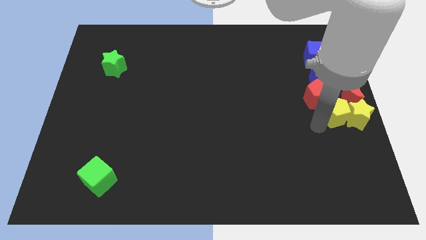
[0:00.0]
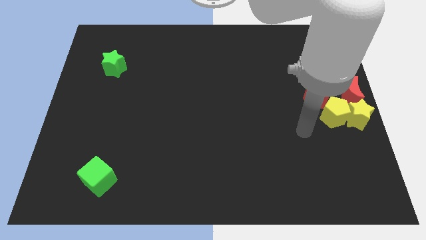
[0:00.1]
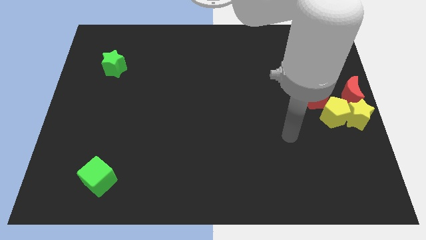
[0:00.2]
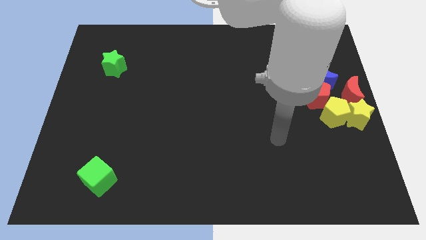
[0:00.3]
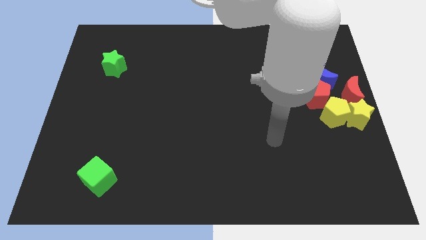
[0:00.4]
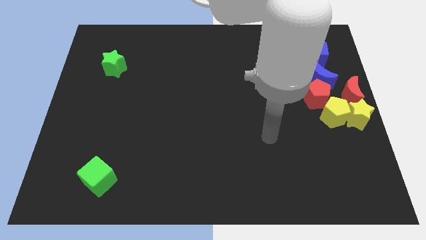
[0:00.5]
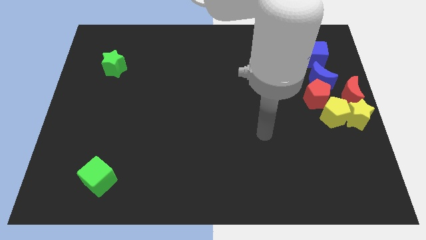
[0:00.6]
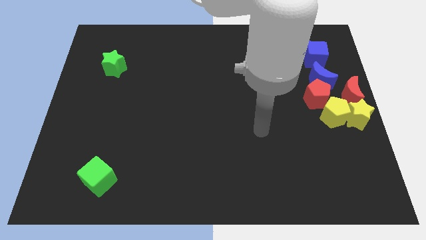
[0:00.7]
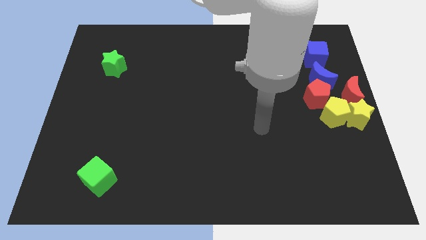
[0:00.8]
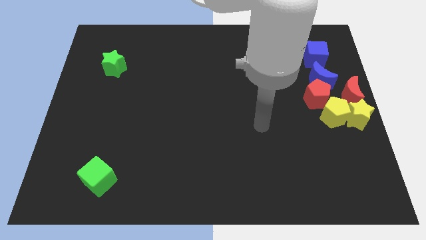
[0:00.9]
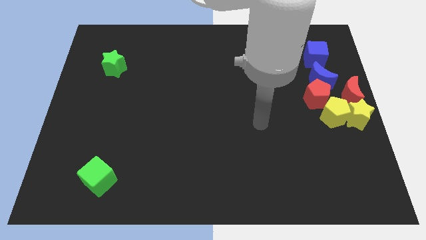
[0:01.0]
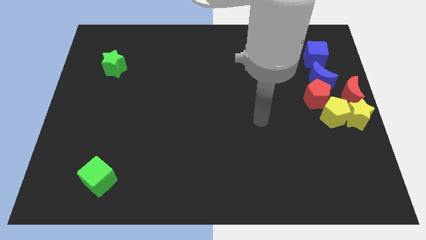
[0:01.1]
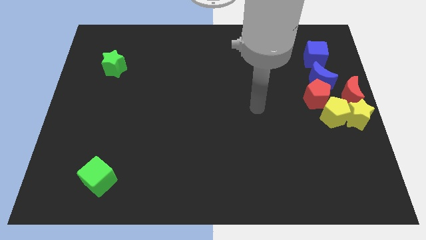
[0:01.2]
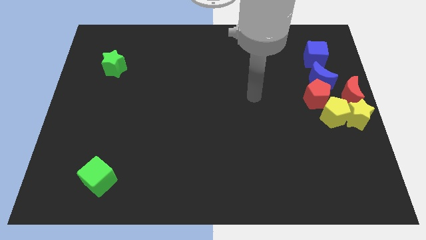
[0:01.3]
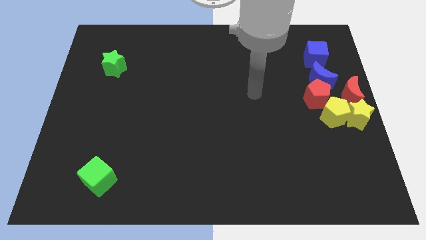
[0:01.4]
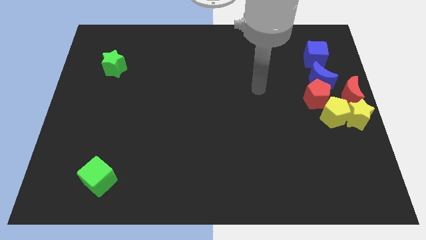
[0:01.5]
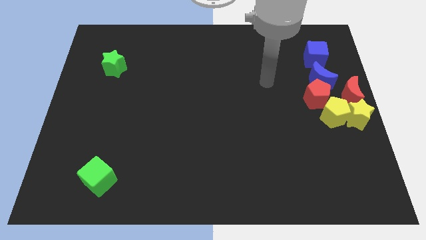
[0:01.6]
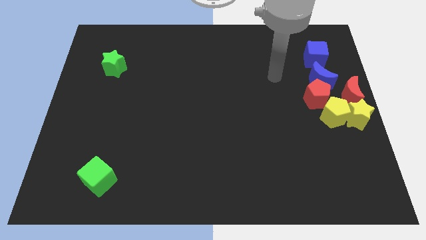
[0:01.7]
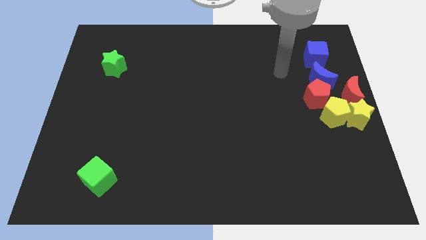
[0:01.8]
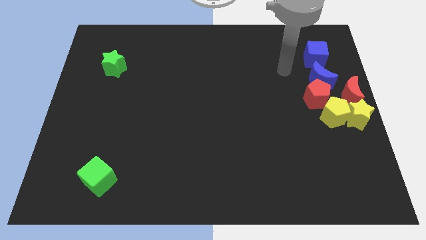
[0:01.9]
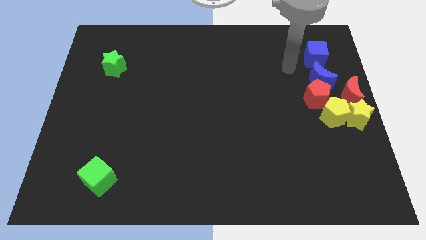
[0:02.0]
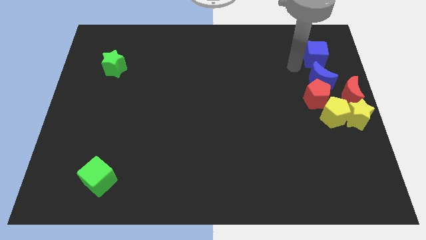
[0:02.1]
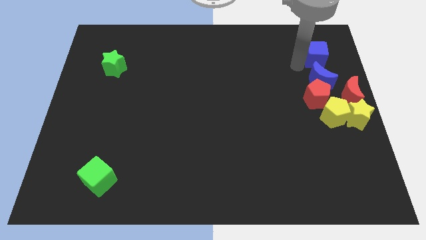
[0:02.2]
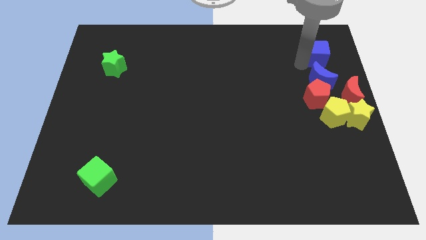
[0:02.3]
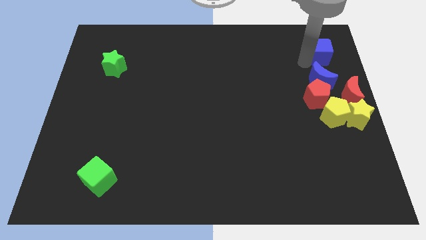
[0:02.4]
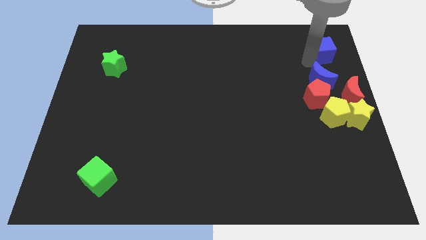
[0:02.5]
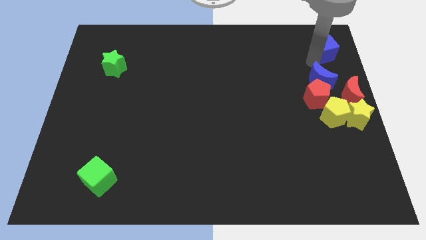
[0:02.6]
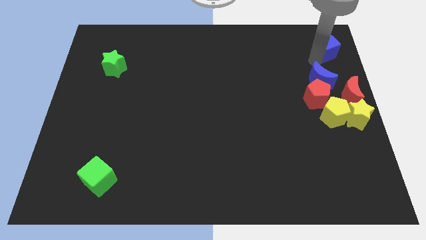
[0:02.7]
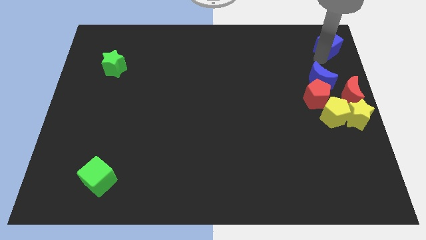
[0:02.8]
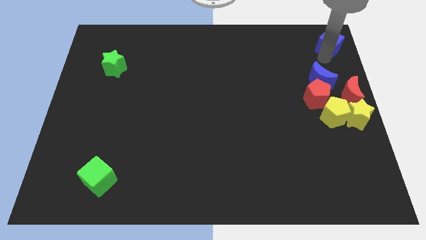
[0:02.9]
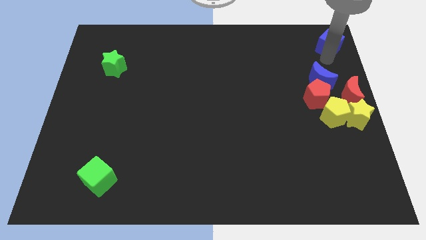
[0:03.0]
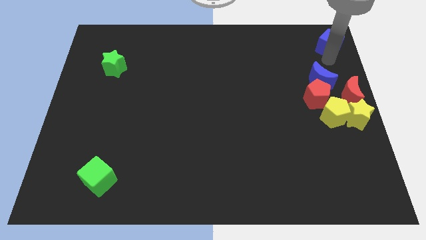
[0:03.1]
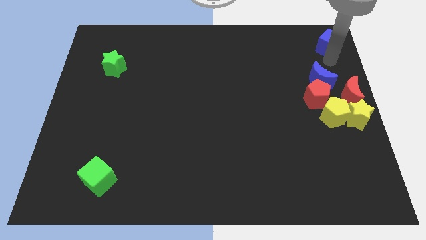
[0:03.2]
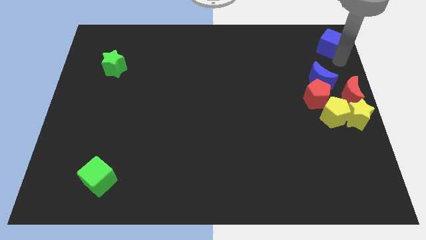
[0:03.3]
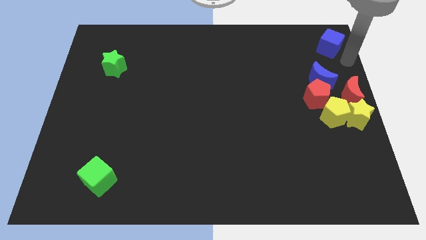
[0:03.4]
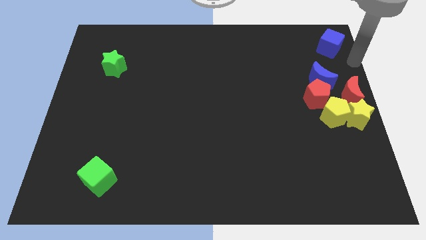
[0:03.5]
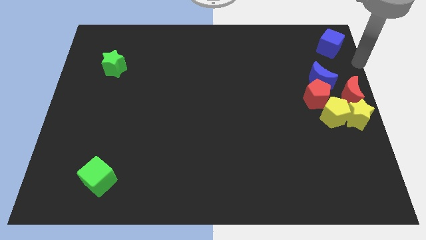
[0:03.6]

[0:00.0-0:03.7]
move the blue cube to the top right

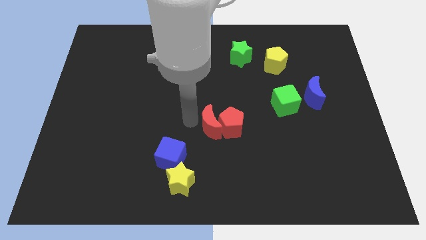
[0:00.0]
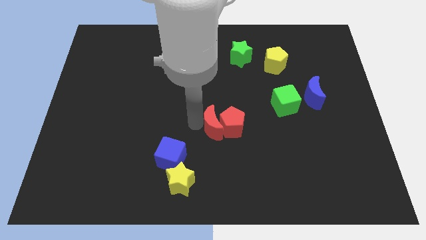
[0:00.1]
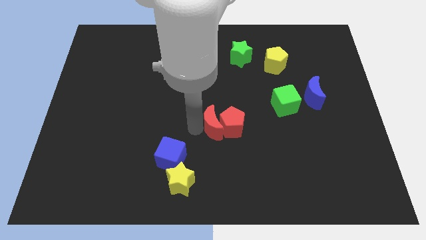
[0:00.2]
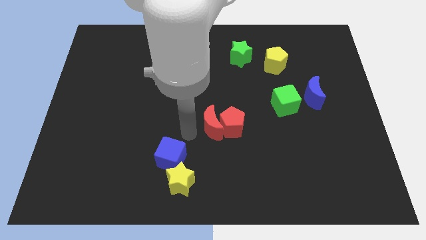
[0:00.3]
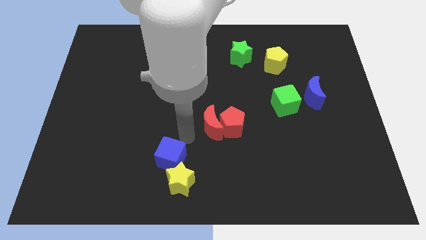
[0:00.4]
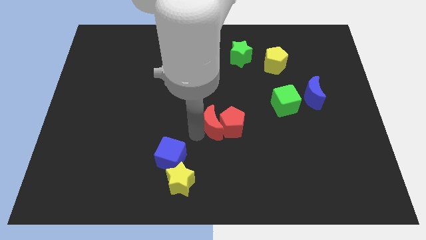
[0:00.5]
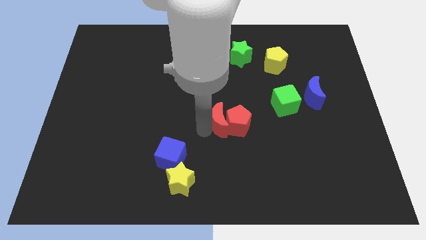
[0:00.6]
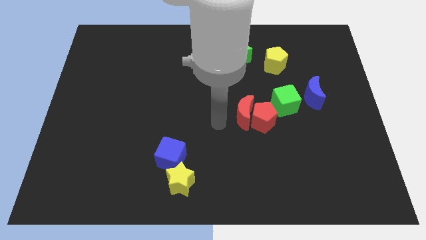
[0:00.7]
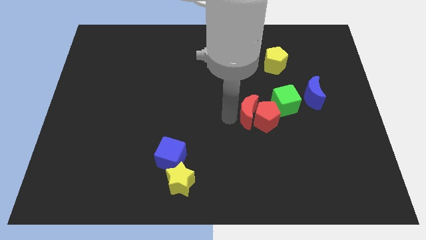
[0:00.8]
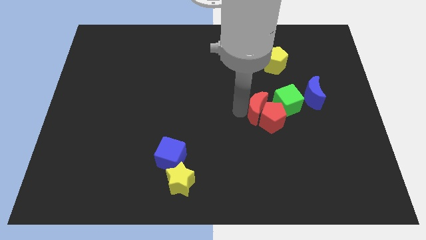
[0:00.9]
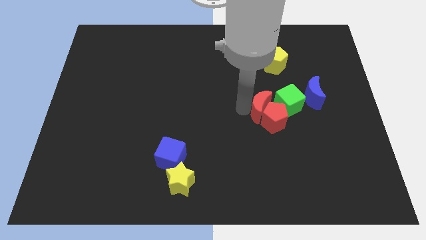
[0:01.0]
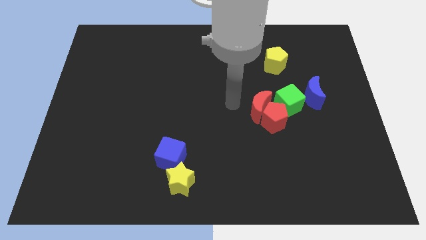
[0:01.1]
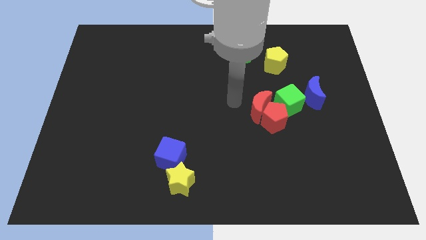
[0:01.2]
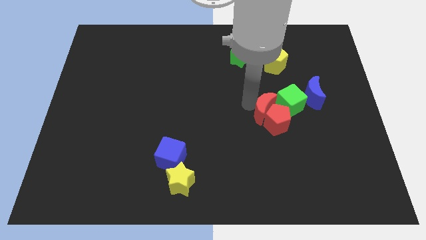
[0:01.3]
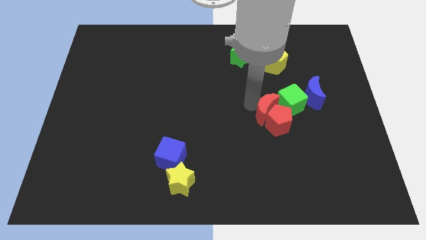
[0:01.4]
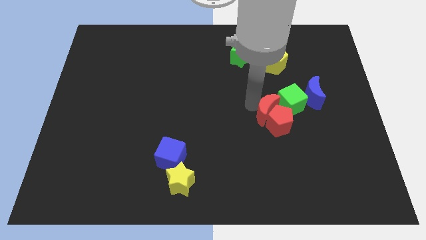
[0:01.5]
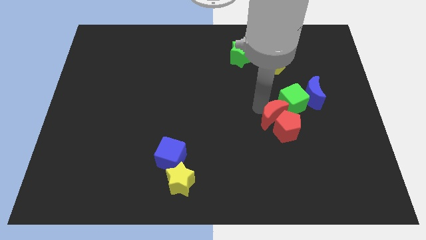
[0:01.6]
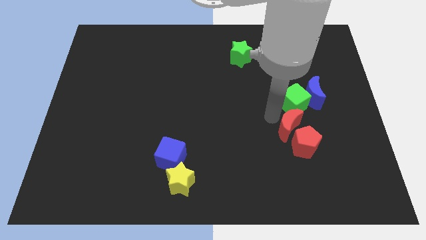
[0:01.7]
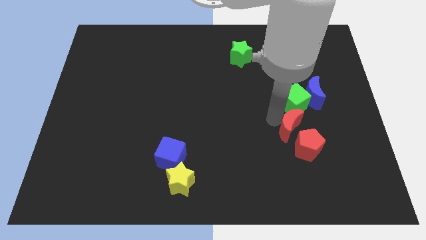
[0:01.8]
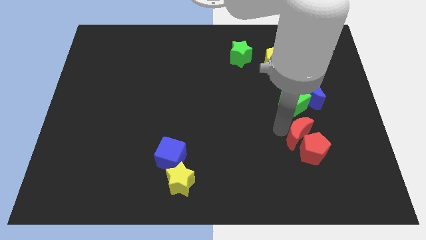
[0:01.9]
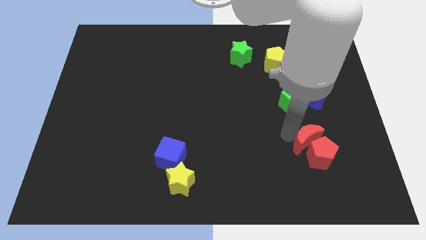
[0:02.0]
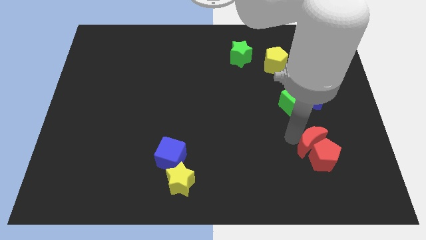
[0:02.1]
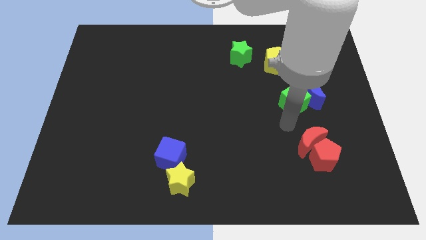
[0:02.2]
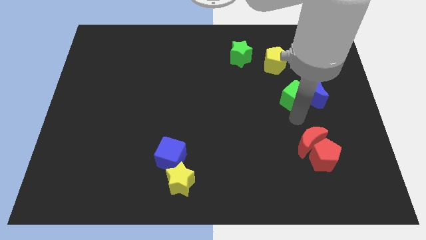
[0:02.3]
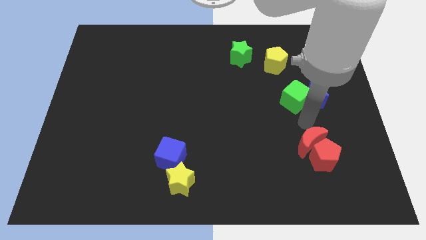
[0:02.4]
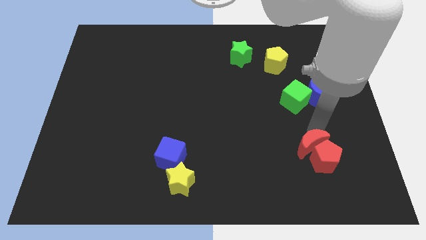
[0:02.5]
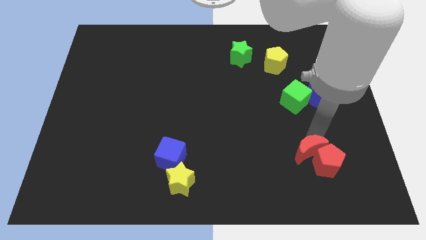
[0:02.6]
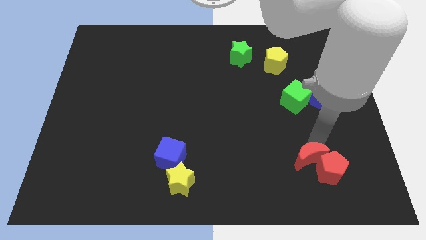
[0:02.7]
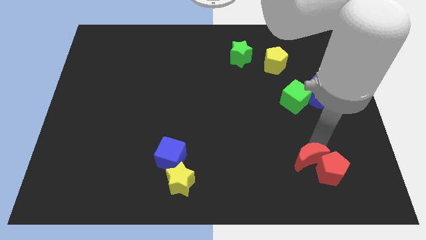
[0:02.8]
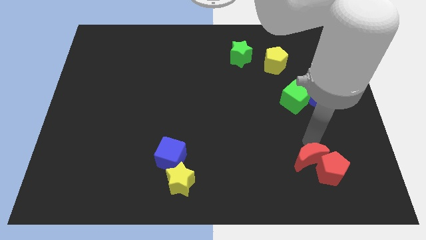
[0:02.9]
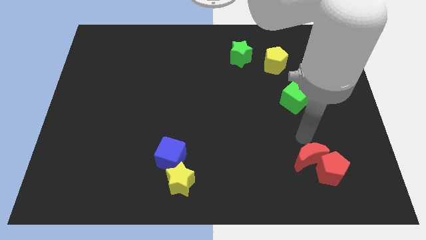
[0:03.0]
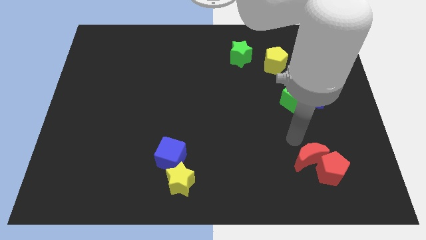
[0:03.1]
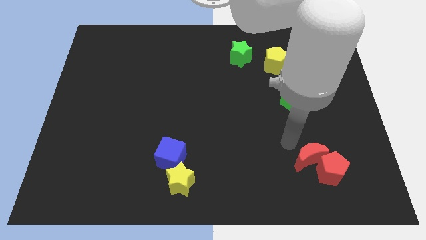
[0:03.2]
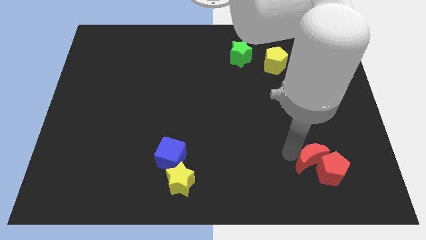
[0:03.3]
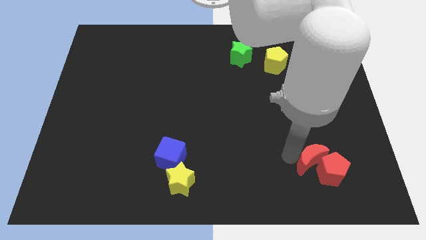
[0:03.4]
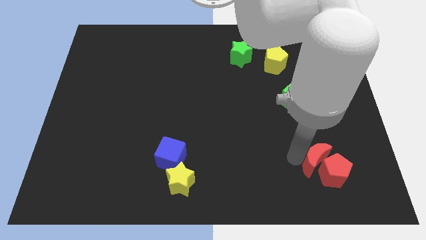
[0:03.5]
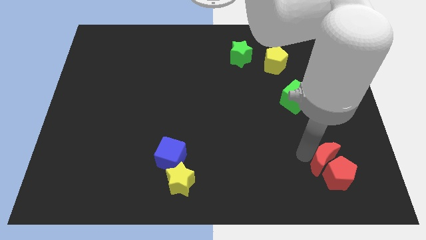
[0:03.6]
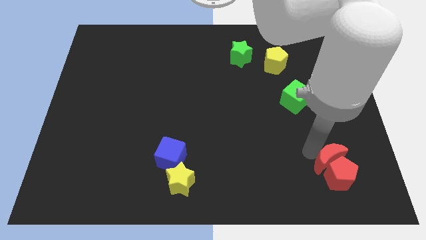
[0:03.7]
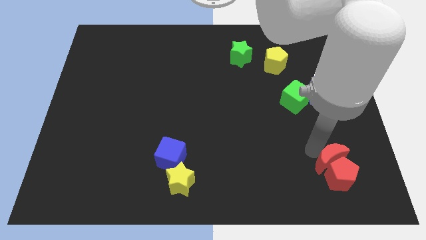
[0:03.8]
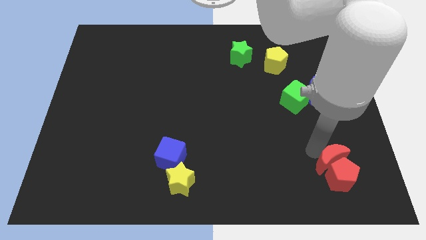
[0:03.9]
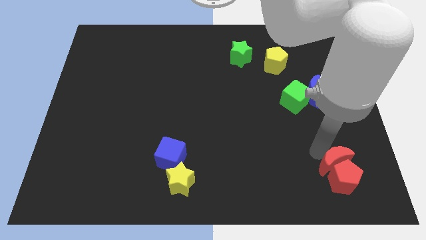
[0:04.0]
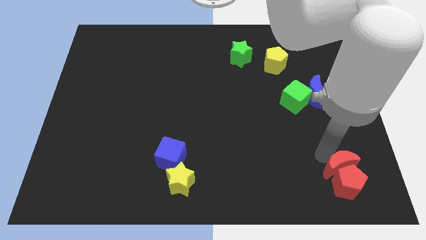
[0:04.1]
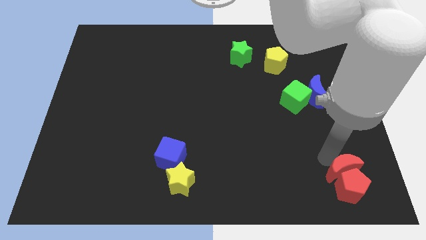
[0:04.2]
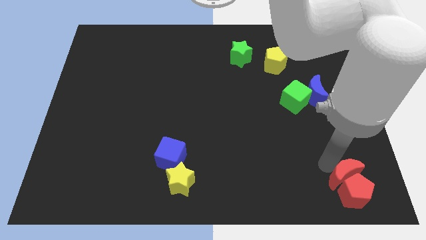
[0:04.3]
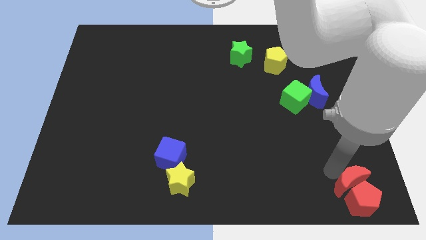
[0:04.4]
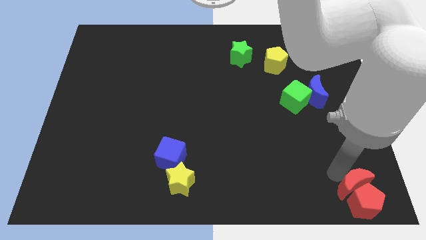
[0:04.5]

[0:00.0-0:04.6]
move the red blocks diagonally bottom right to the green cube

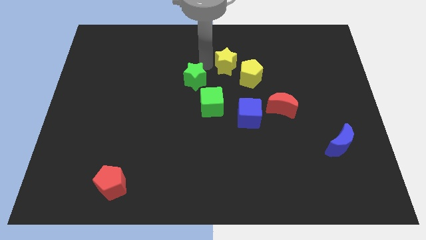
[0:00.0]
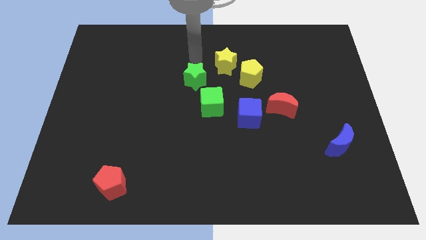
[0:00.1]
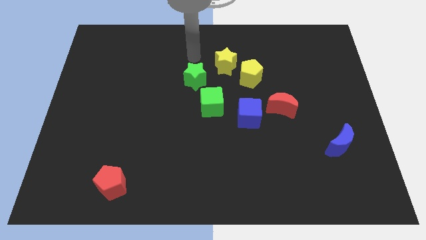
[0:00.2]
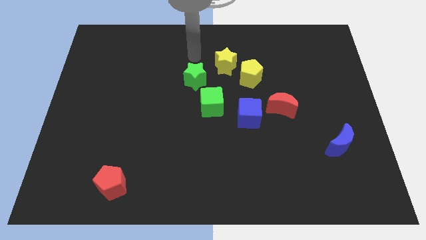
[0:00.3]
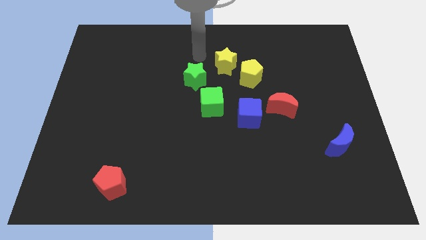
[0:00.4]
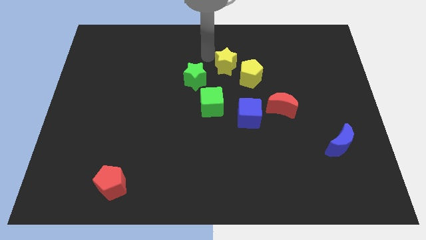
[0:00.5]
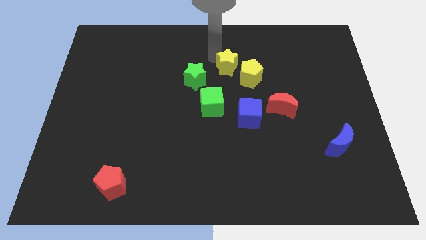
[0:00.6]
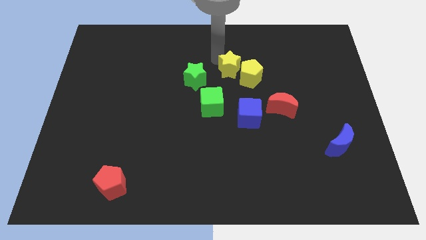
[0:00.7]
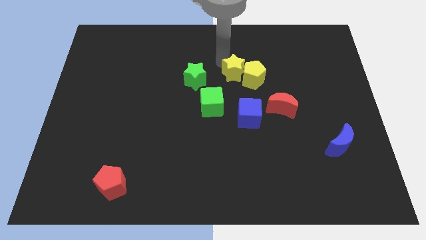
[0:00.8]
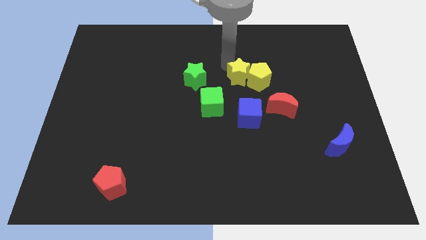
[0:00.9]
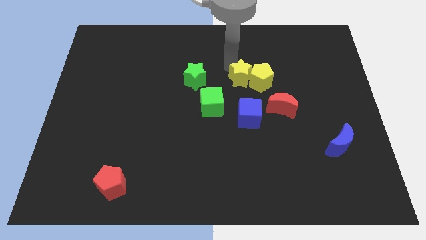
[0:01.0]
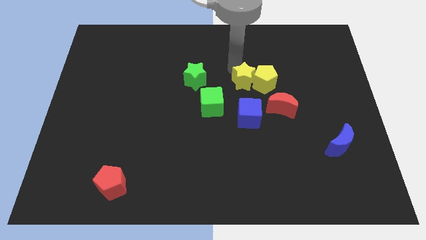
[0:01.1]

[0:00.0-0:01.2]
push yellow star close to yellow pentagon
